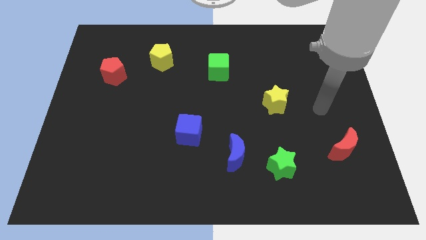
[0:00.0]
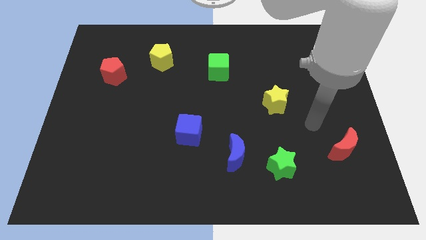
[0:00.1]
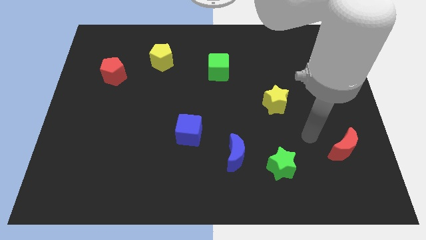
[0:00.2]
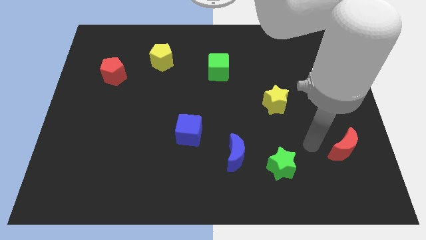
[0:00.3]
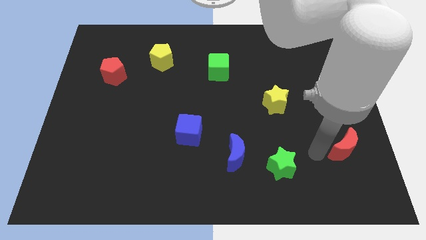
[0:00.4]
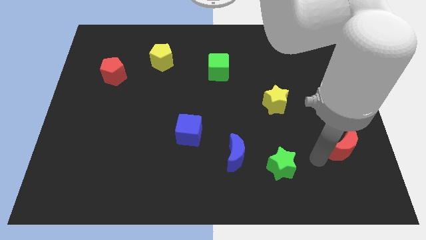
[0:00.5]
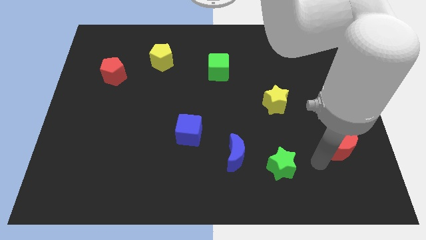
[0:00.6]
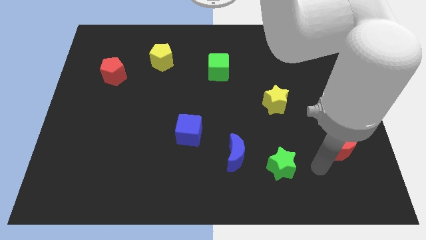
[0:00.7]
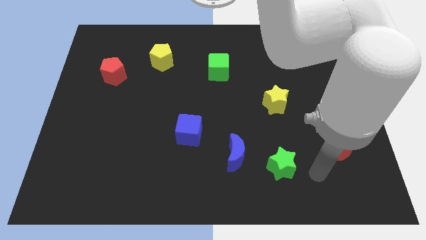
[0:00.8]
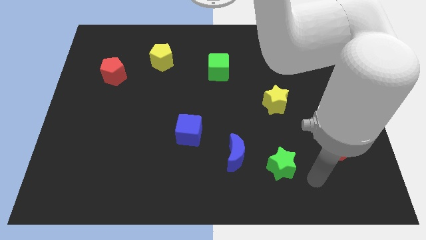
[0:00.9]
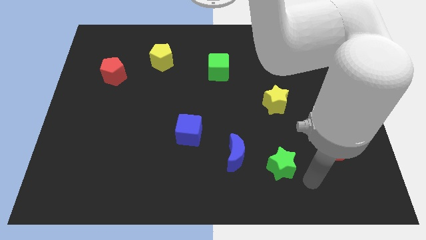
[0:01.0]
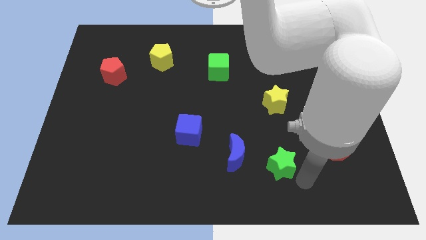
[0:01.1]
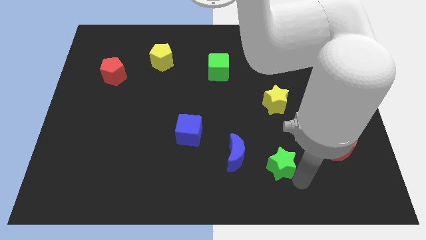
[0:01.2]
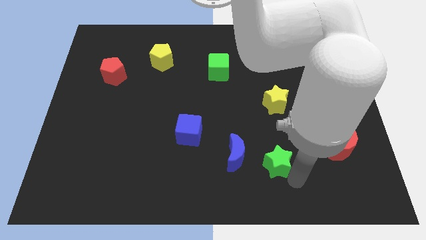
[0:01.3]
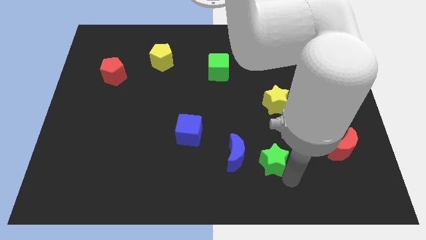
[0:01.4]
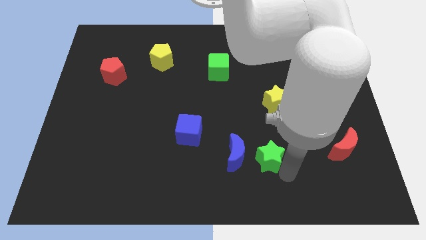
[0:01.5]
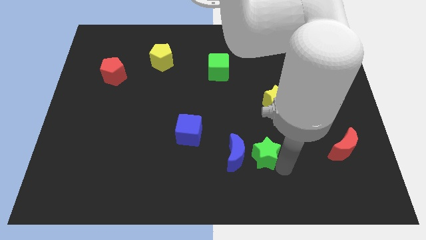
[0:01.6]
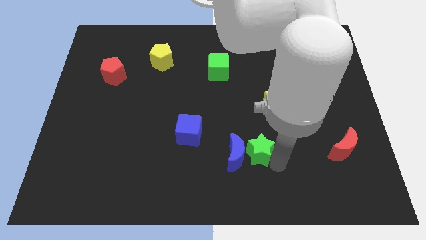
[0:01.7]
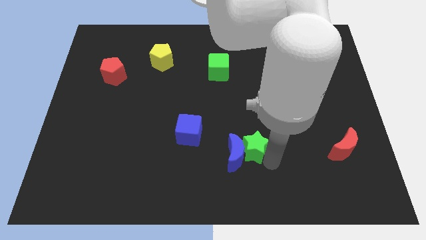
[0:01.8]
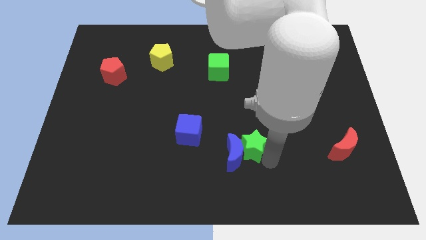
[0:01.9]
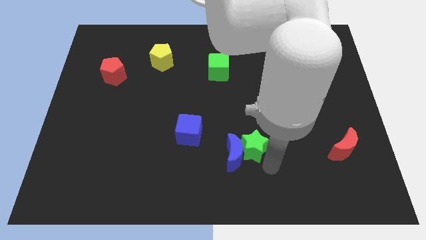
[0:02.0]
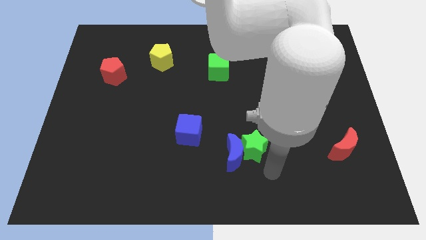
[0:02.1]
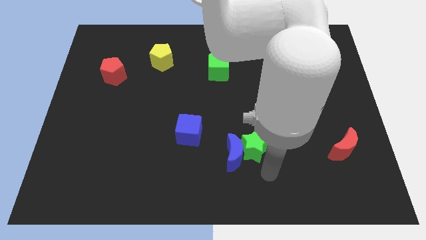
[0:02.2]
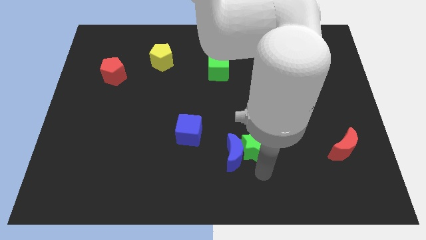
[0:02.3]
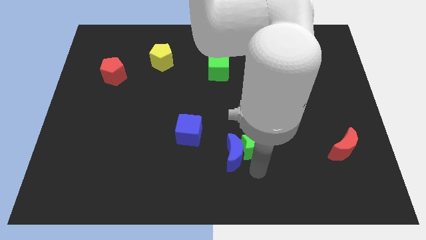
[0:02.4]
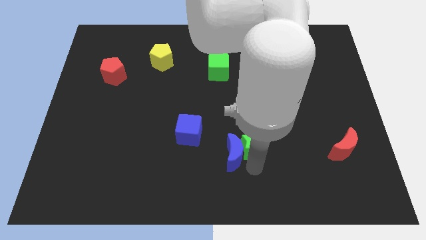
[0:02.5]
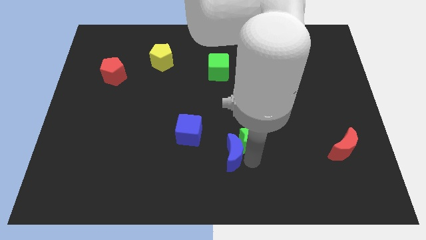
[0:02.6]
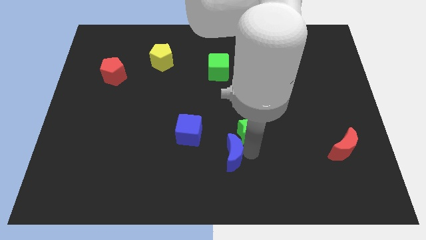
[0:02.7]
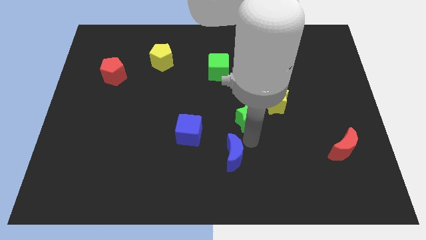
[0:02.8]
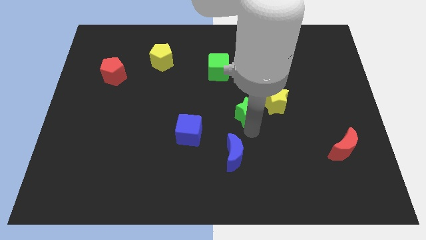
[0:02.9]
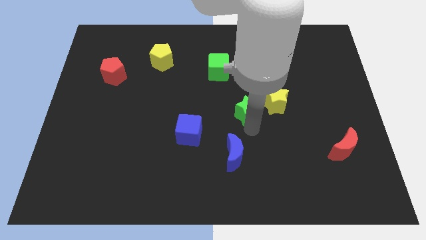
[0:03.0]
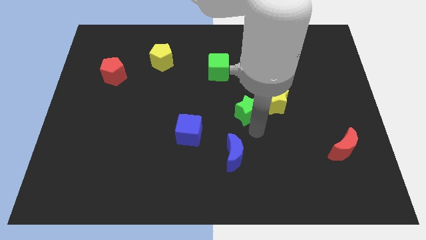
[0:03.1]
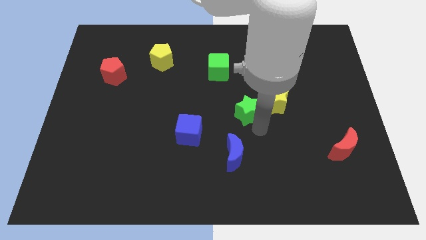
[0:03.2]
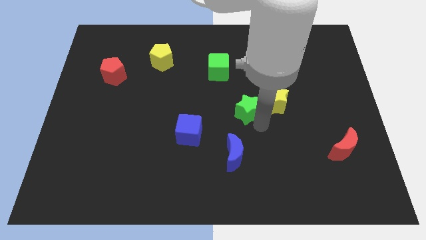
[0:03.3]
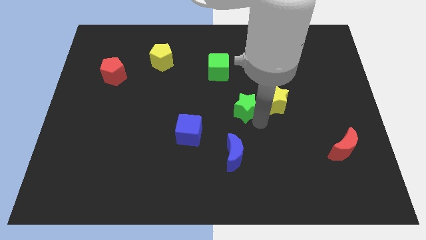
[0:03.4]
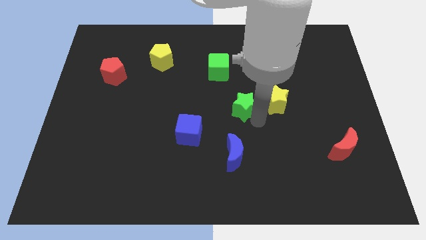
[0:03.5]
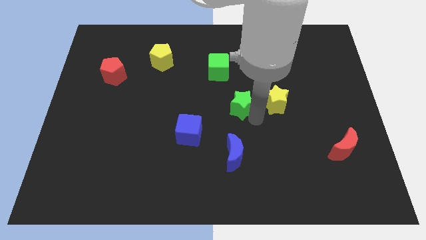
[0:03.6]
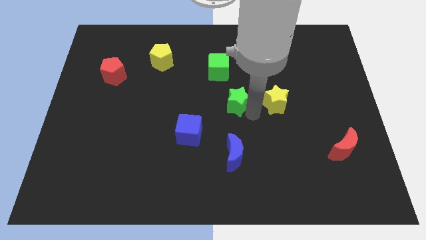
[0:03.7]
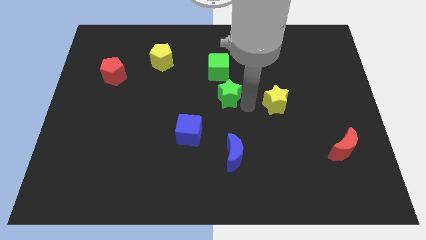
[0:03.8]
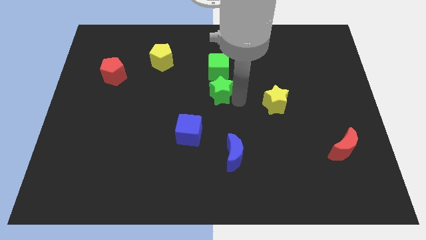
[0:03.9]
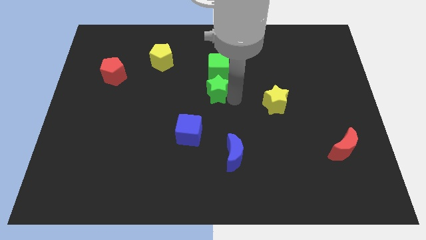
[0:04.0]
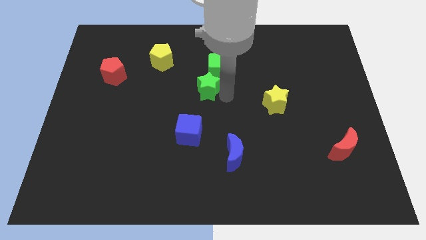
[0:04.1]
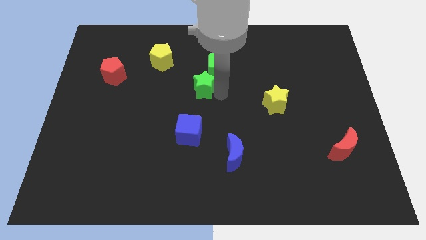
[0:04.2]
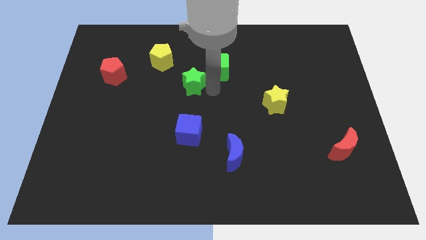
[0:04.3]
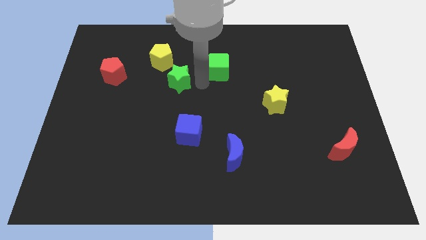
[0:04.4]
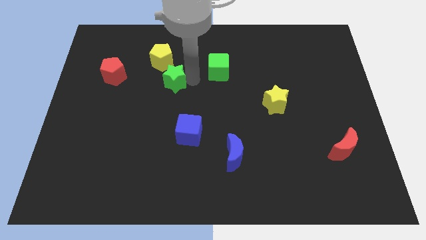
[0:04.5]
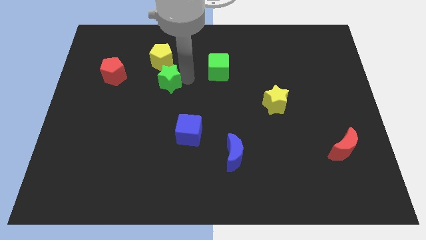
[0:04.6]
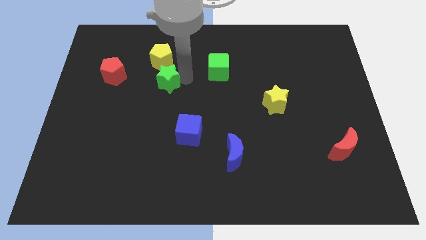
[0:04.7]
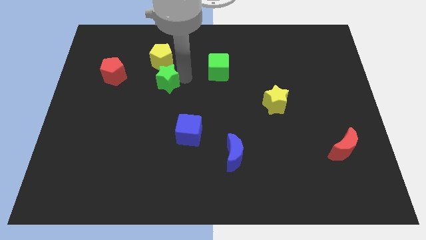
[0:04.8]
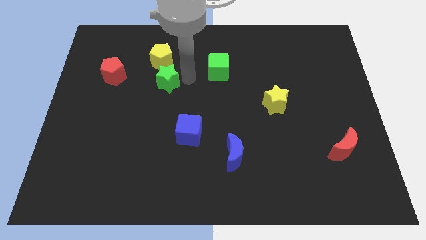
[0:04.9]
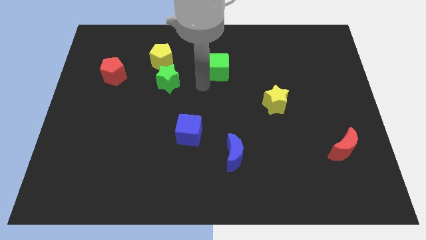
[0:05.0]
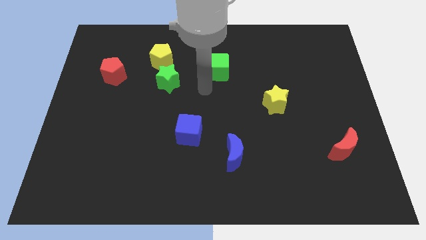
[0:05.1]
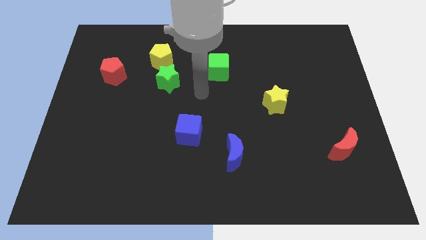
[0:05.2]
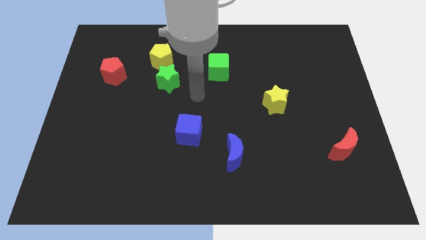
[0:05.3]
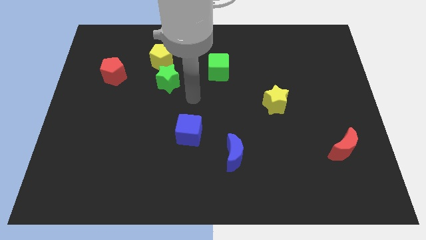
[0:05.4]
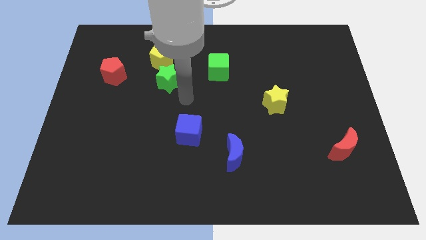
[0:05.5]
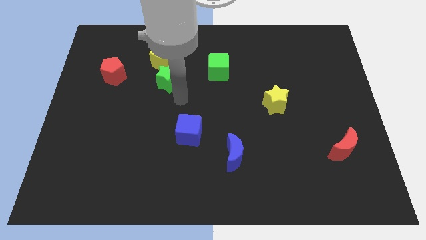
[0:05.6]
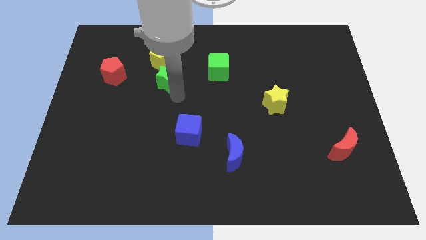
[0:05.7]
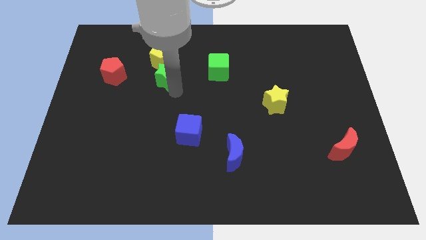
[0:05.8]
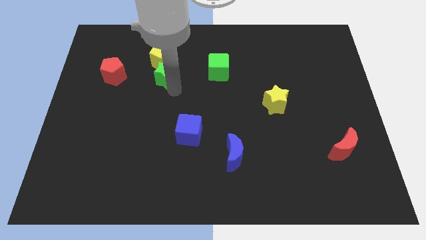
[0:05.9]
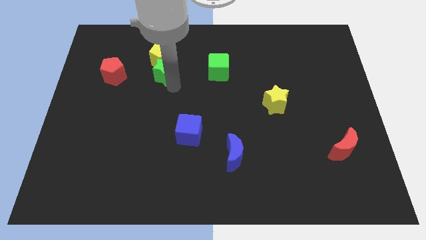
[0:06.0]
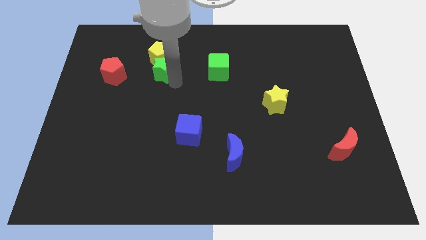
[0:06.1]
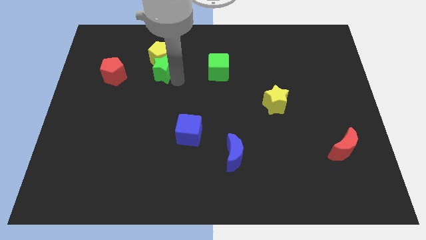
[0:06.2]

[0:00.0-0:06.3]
put the green star towards the yellow pentagon

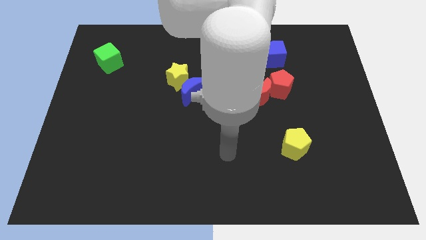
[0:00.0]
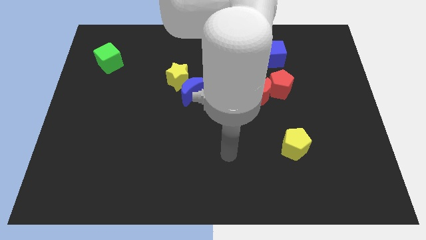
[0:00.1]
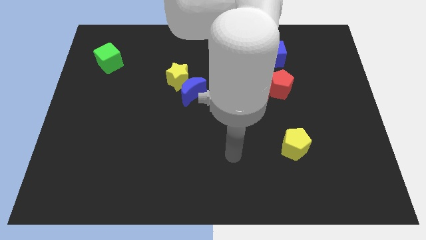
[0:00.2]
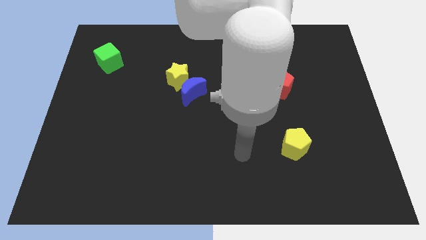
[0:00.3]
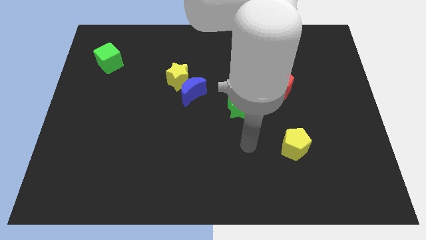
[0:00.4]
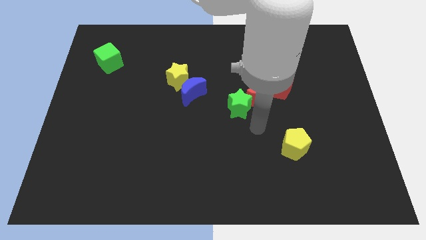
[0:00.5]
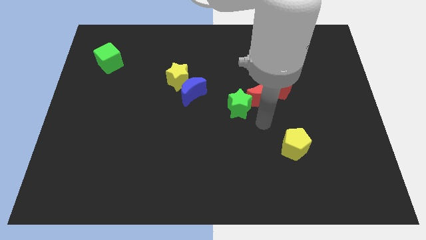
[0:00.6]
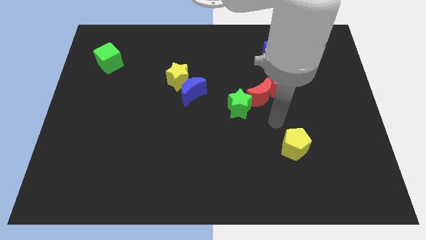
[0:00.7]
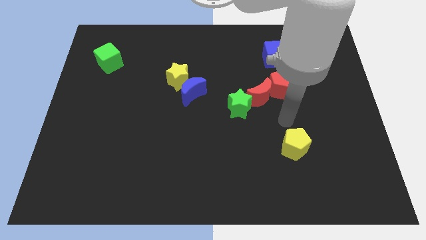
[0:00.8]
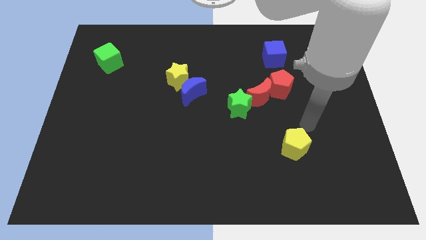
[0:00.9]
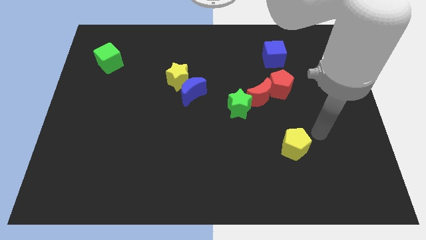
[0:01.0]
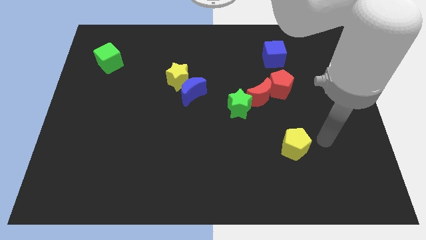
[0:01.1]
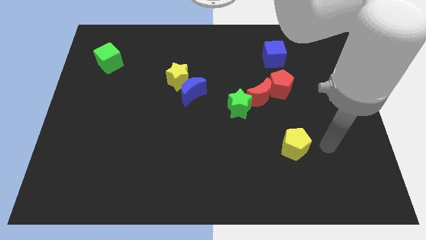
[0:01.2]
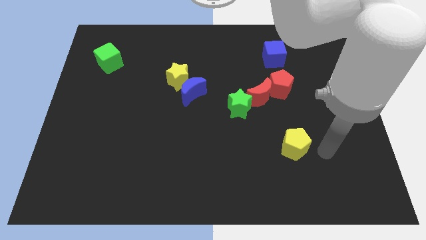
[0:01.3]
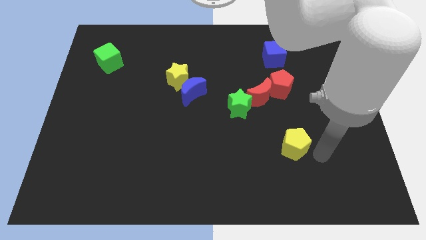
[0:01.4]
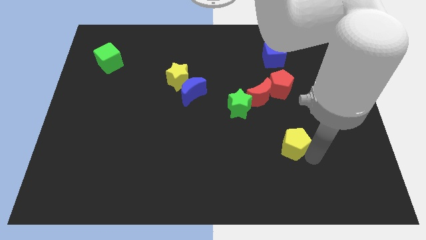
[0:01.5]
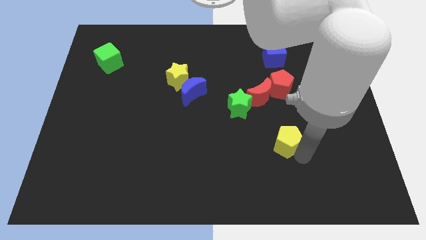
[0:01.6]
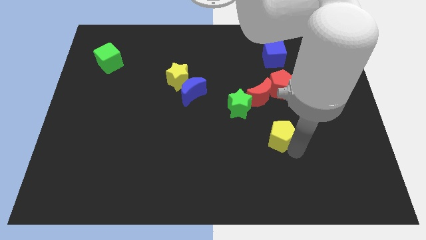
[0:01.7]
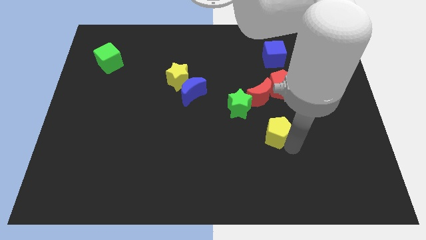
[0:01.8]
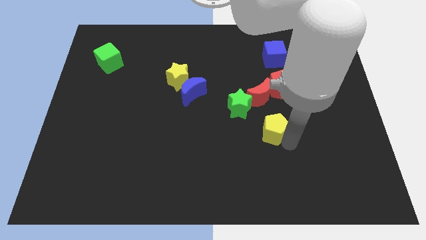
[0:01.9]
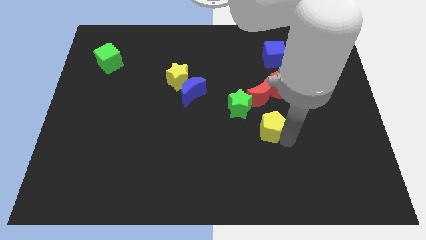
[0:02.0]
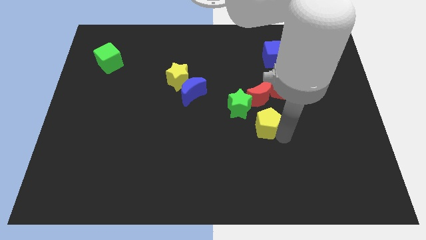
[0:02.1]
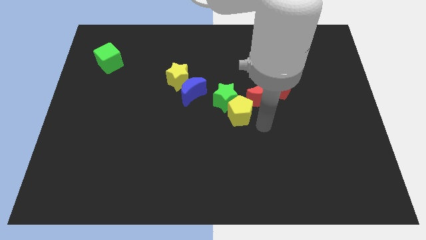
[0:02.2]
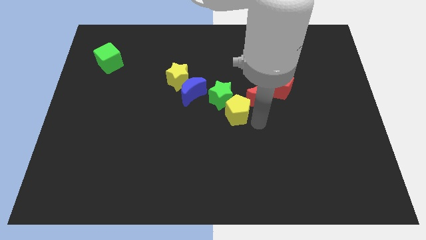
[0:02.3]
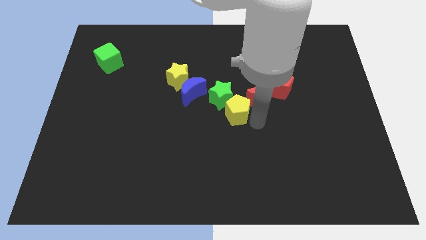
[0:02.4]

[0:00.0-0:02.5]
put the yellow pentagon towards the green star
